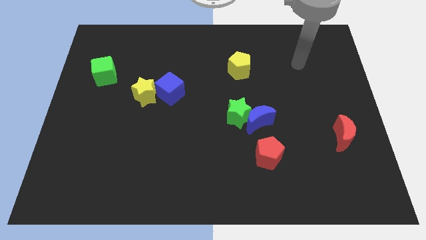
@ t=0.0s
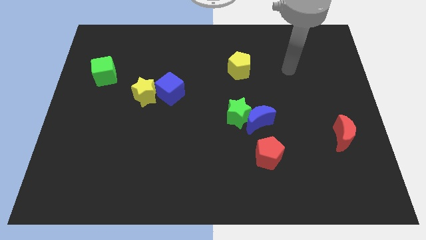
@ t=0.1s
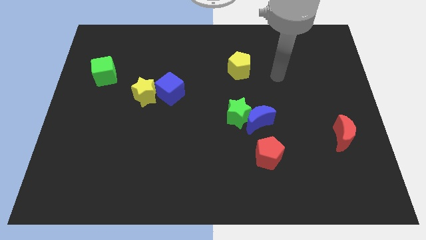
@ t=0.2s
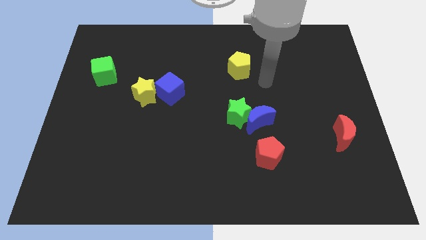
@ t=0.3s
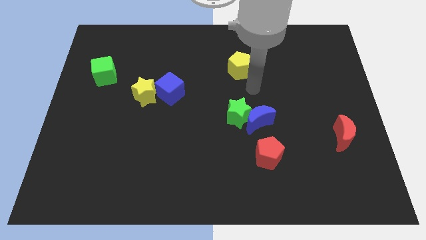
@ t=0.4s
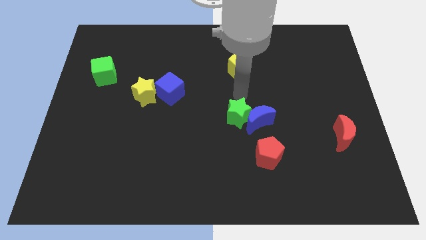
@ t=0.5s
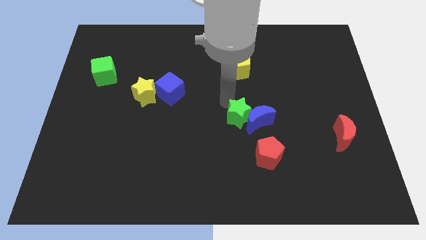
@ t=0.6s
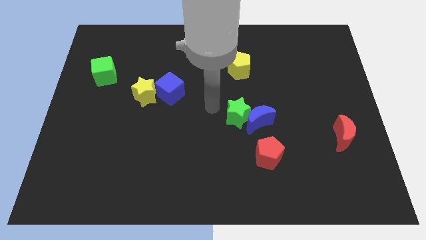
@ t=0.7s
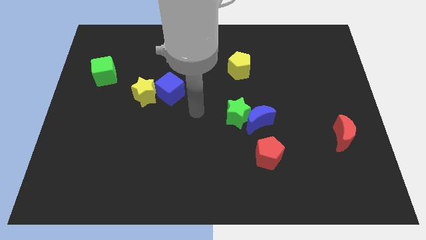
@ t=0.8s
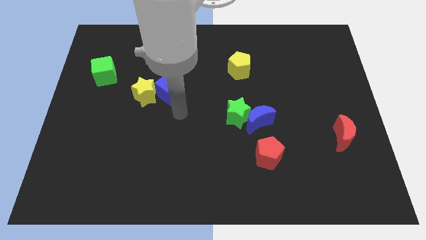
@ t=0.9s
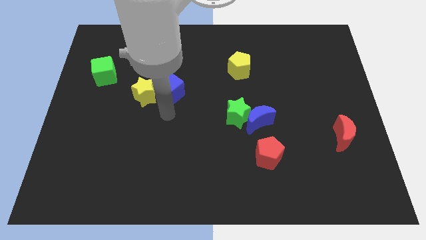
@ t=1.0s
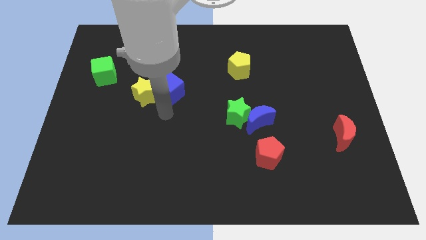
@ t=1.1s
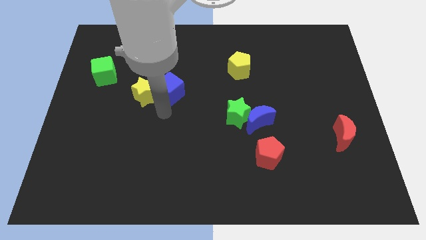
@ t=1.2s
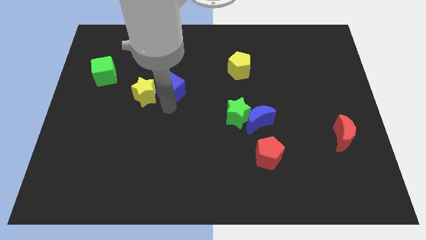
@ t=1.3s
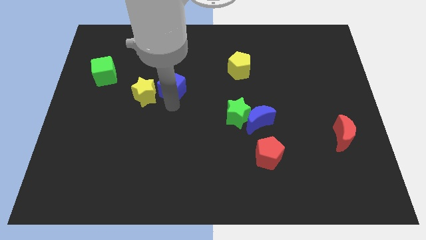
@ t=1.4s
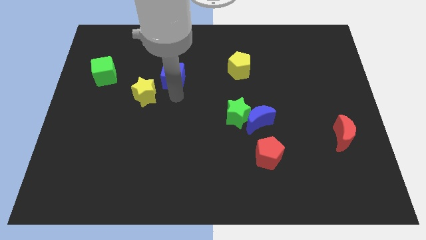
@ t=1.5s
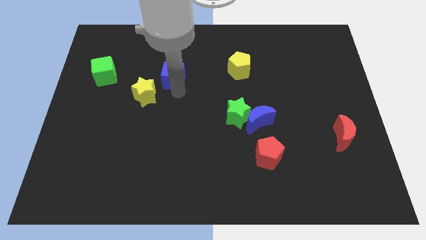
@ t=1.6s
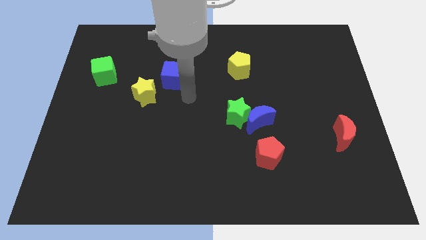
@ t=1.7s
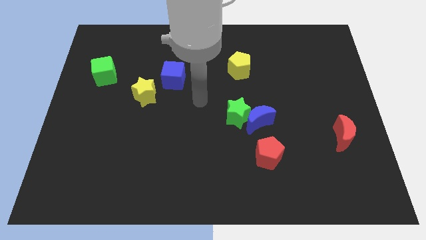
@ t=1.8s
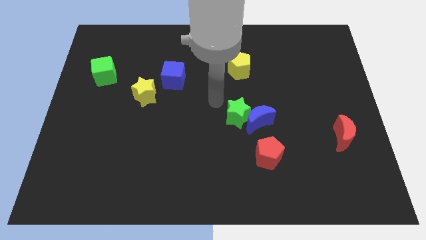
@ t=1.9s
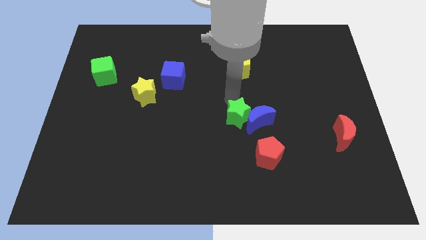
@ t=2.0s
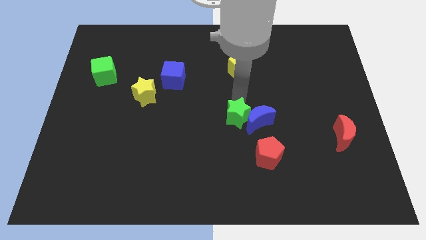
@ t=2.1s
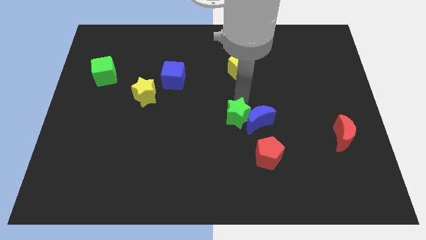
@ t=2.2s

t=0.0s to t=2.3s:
separate the blue cube and yellow star

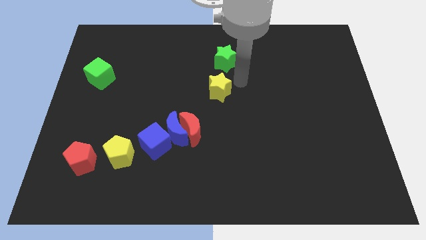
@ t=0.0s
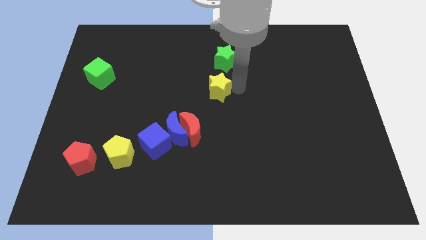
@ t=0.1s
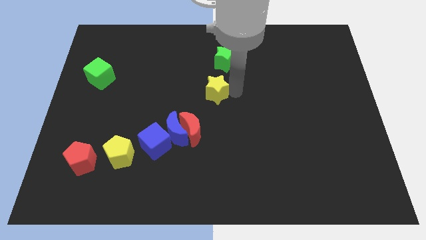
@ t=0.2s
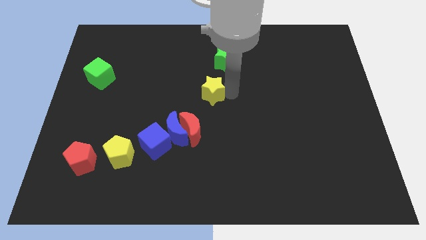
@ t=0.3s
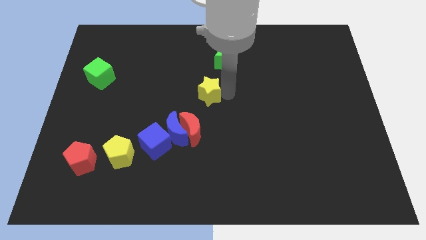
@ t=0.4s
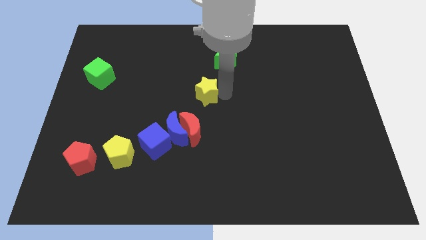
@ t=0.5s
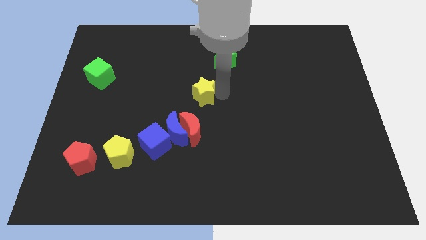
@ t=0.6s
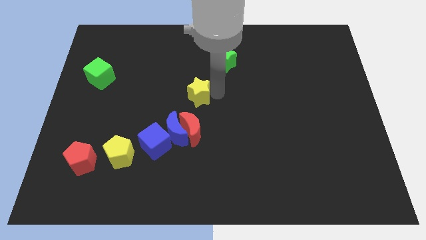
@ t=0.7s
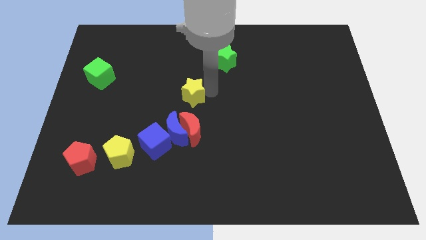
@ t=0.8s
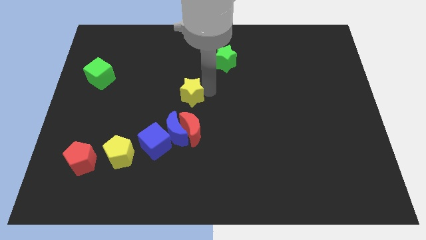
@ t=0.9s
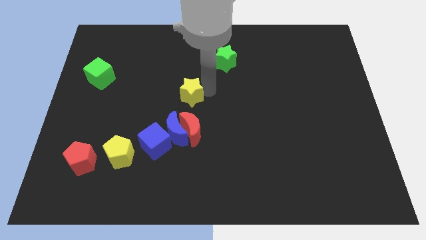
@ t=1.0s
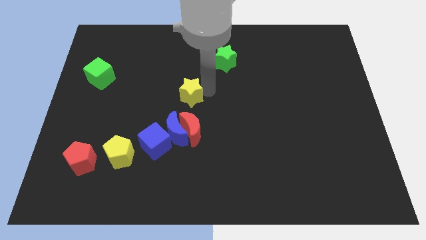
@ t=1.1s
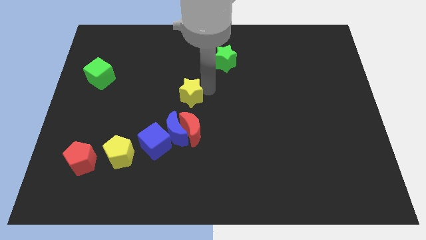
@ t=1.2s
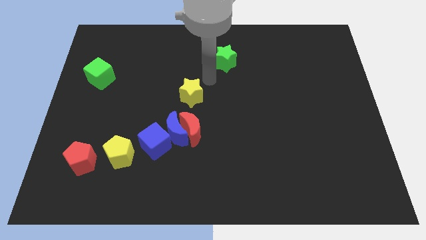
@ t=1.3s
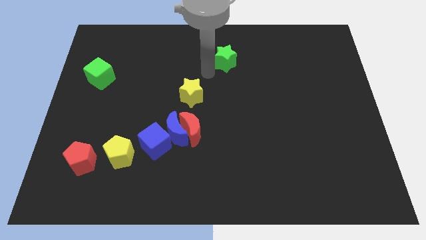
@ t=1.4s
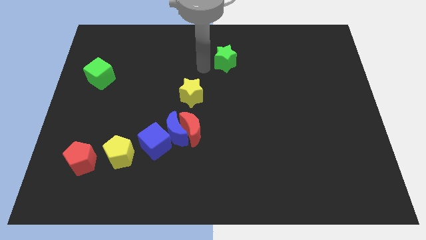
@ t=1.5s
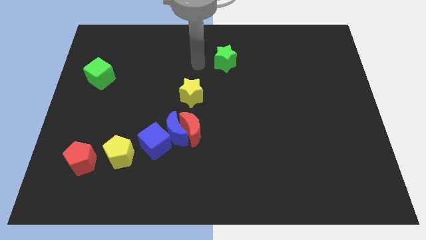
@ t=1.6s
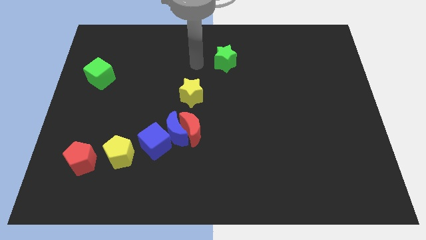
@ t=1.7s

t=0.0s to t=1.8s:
move the yellow star parallel to the green star

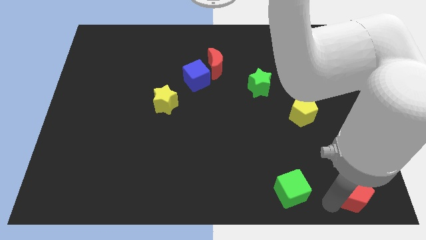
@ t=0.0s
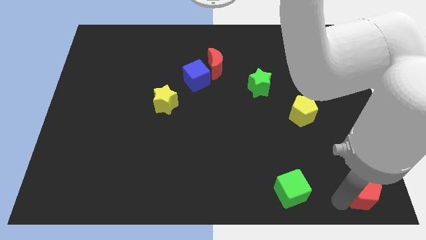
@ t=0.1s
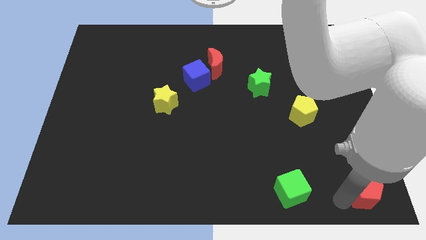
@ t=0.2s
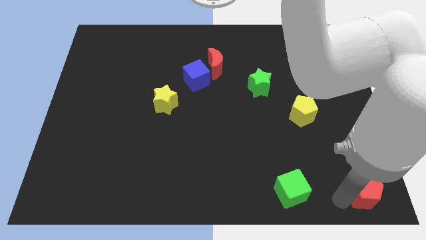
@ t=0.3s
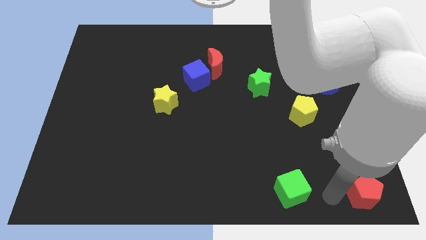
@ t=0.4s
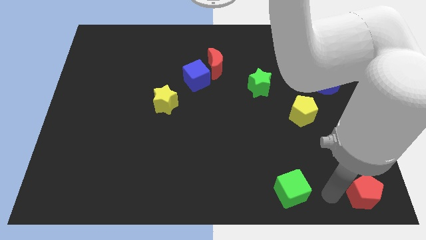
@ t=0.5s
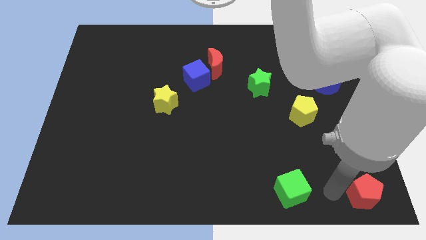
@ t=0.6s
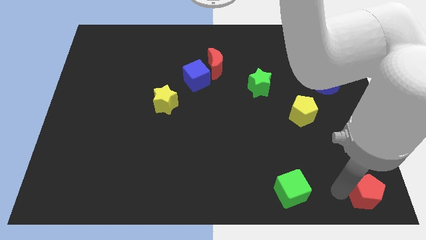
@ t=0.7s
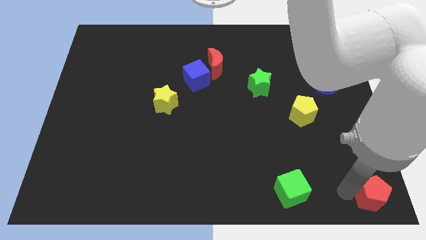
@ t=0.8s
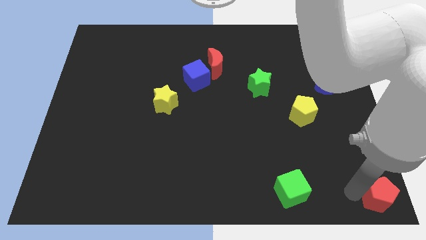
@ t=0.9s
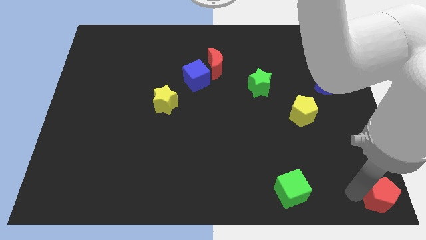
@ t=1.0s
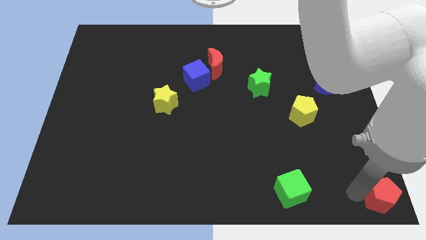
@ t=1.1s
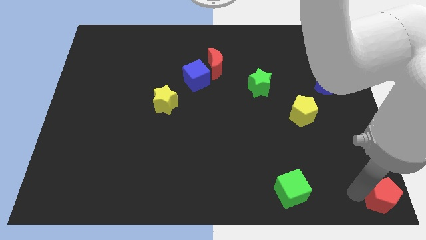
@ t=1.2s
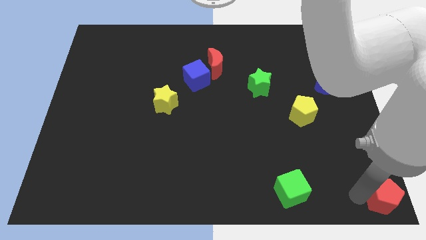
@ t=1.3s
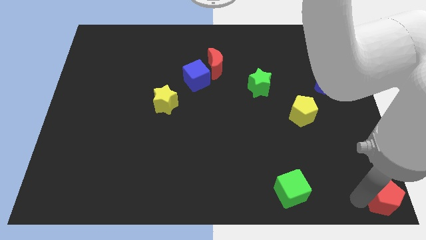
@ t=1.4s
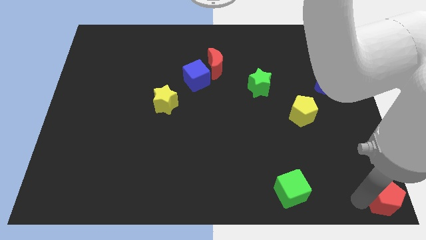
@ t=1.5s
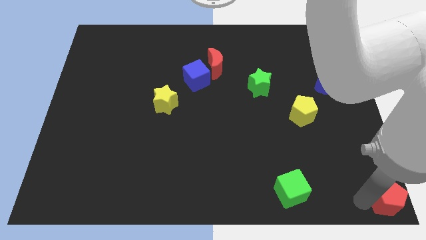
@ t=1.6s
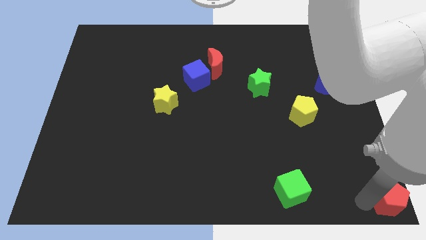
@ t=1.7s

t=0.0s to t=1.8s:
place the red pentagon at the bottom right corner of the board

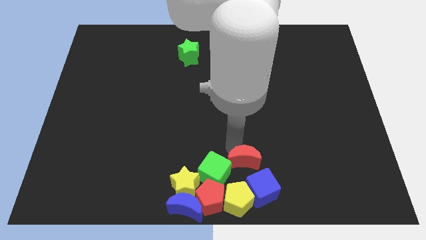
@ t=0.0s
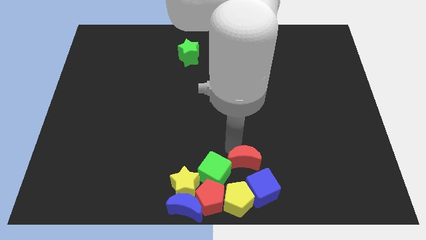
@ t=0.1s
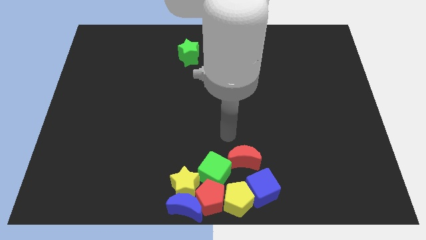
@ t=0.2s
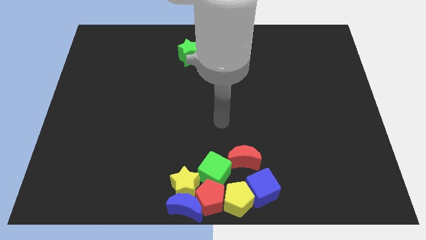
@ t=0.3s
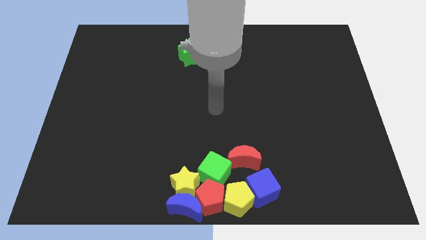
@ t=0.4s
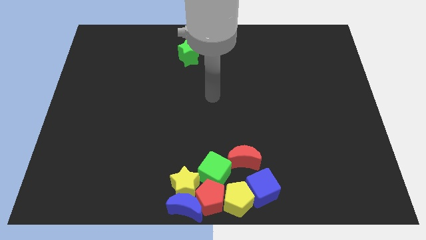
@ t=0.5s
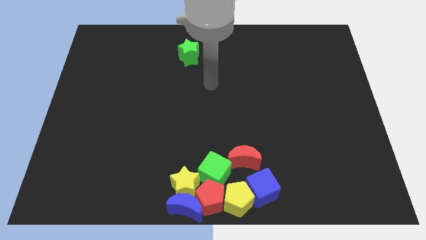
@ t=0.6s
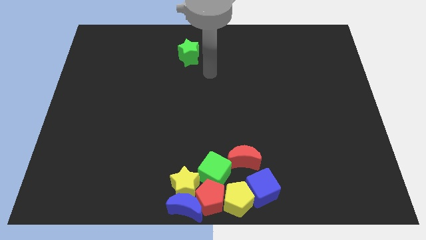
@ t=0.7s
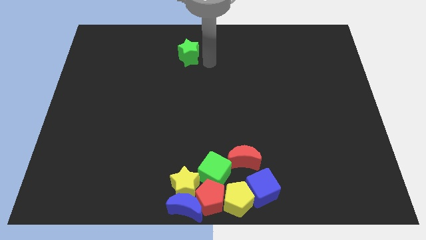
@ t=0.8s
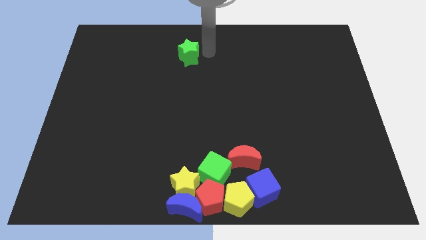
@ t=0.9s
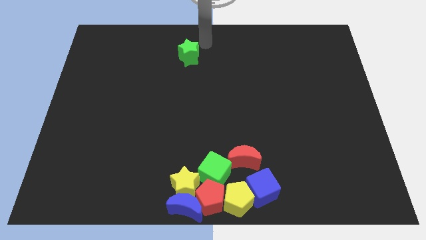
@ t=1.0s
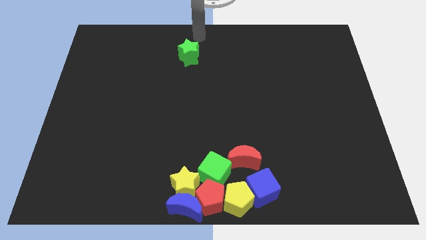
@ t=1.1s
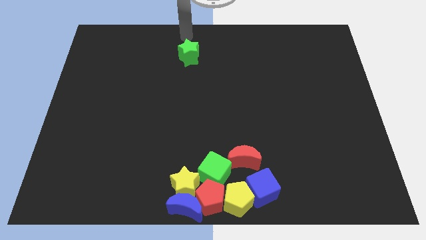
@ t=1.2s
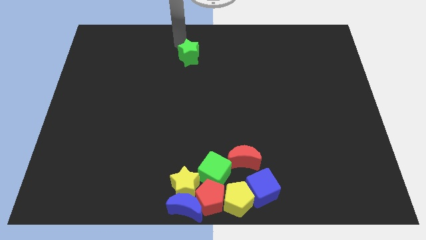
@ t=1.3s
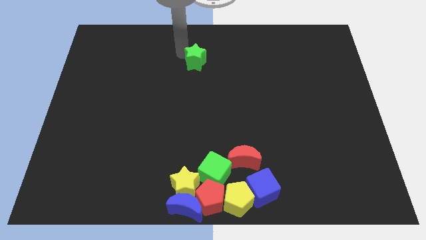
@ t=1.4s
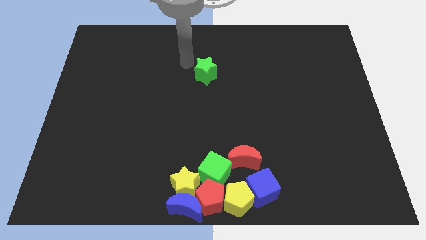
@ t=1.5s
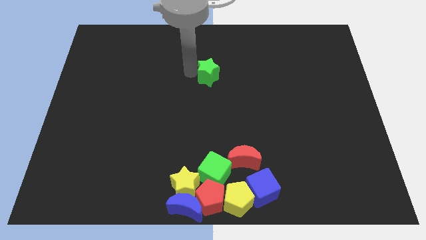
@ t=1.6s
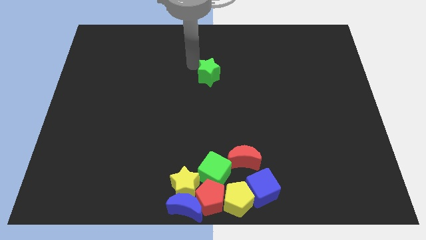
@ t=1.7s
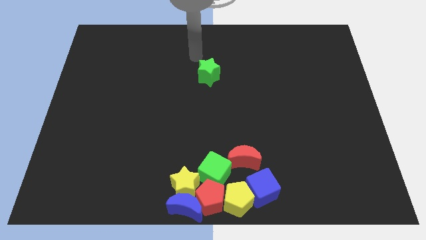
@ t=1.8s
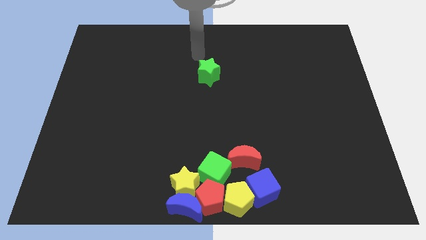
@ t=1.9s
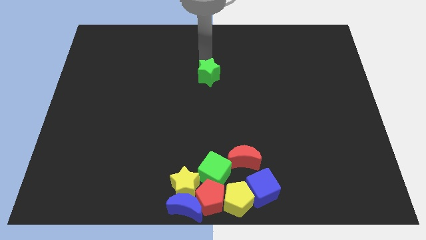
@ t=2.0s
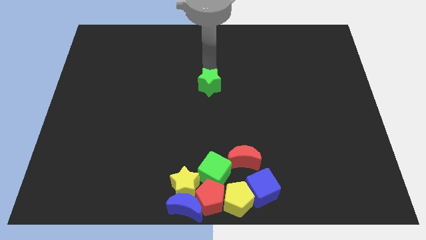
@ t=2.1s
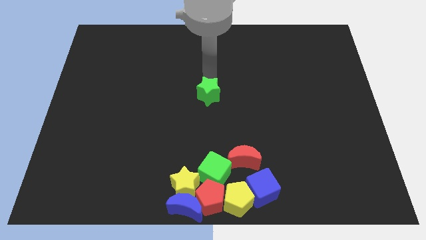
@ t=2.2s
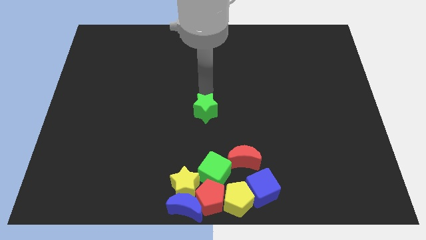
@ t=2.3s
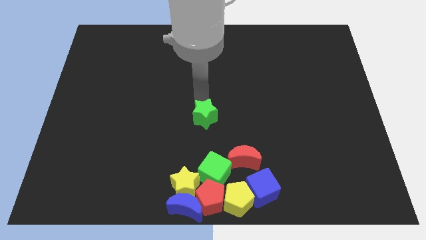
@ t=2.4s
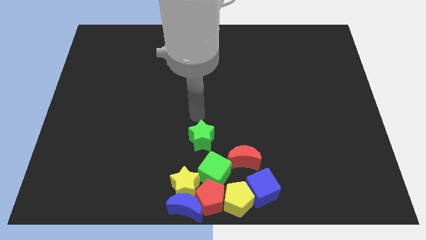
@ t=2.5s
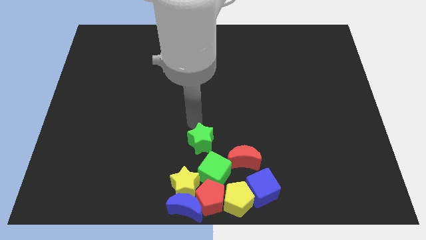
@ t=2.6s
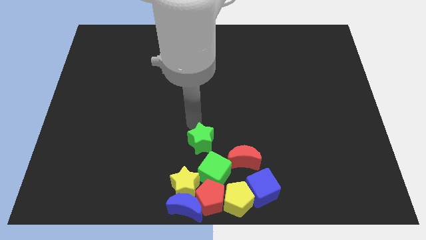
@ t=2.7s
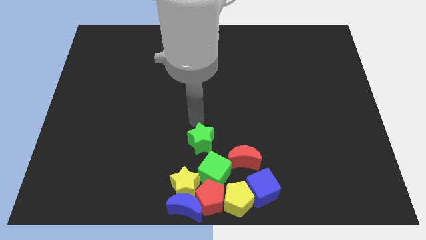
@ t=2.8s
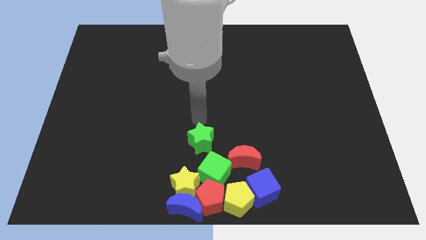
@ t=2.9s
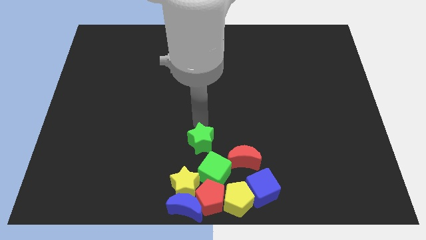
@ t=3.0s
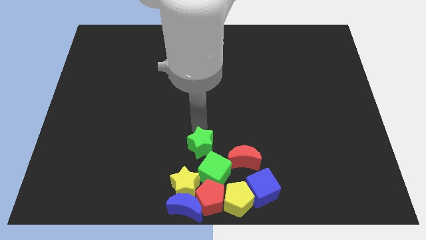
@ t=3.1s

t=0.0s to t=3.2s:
push the green star towards the top of the green cube
